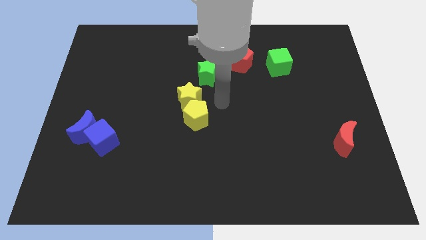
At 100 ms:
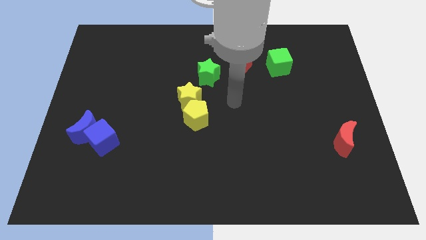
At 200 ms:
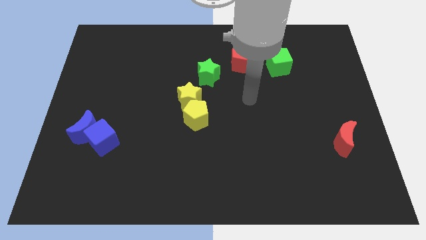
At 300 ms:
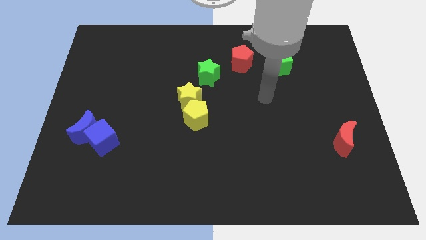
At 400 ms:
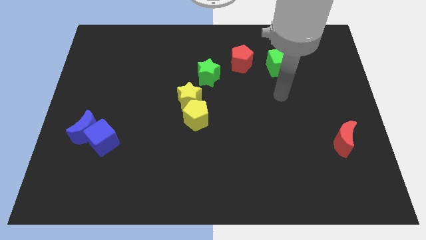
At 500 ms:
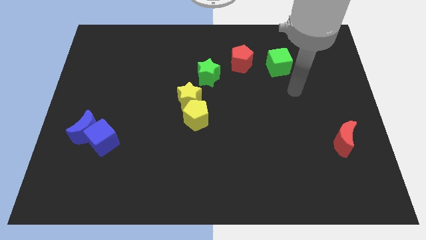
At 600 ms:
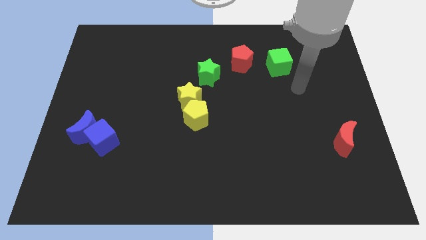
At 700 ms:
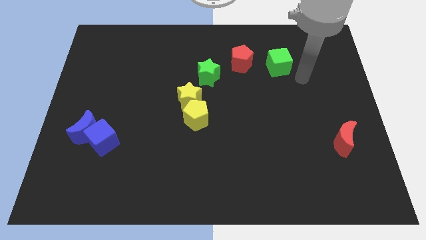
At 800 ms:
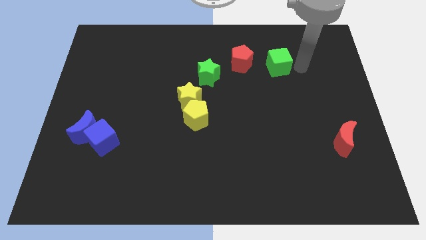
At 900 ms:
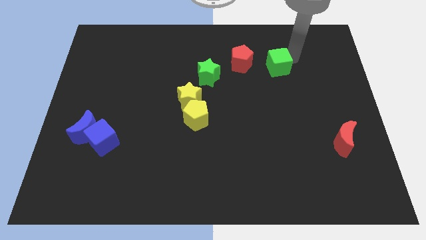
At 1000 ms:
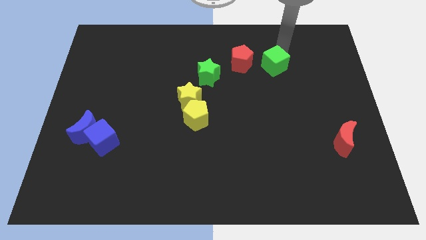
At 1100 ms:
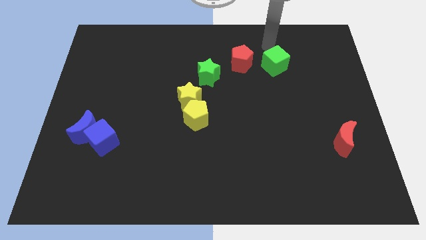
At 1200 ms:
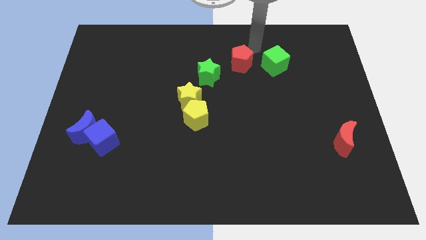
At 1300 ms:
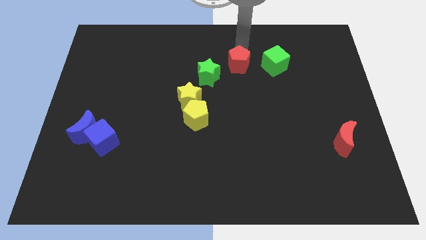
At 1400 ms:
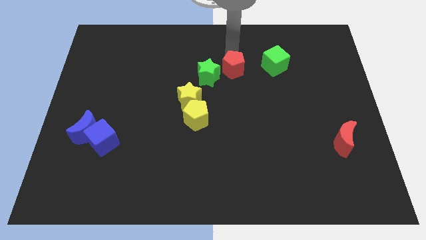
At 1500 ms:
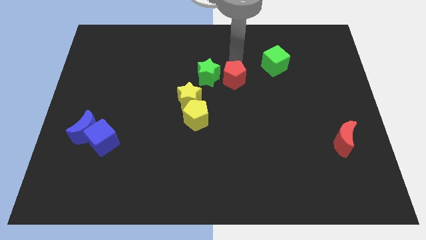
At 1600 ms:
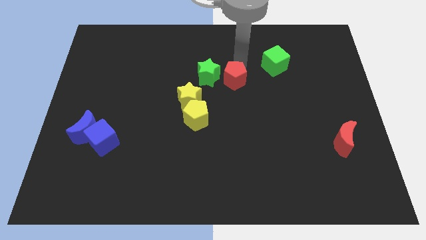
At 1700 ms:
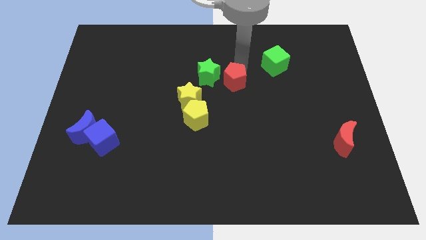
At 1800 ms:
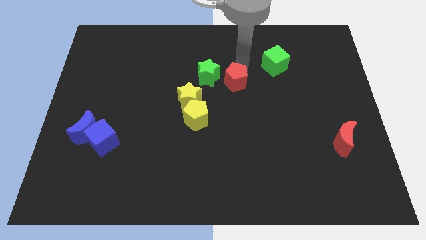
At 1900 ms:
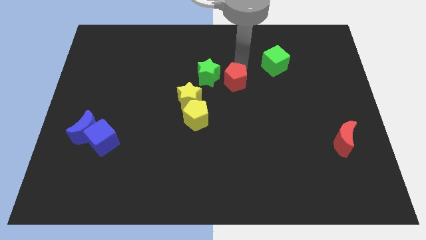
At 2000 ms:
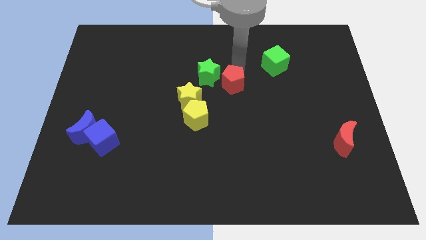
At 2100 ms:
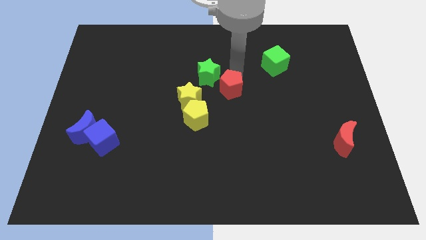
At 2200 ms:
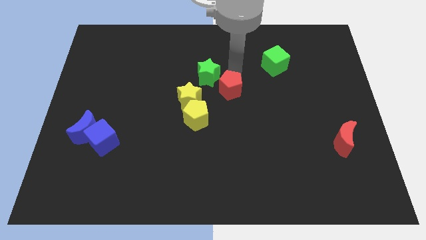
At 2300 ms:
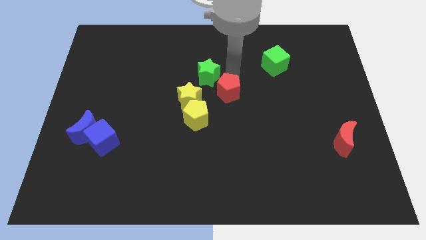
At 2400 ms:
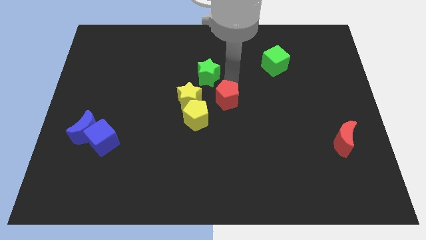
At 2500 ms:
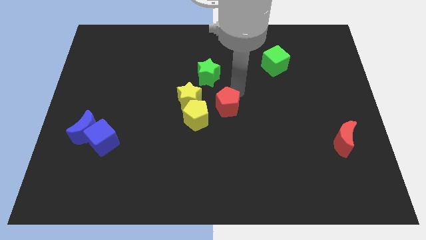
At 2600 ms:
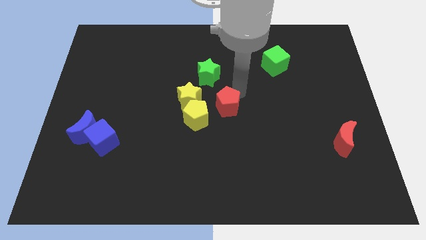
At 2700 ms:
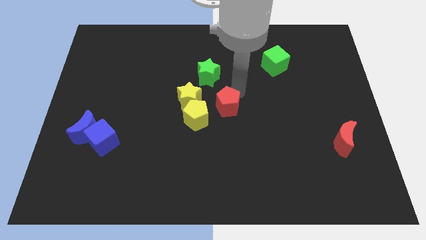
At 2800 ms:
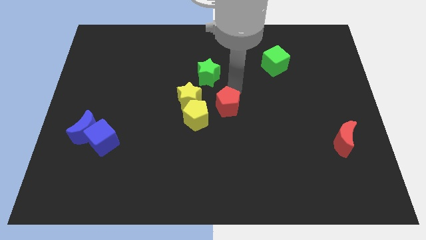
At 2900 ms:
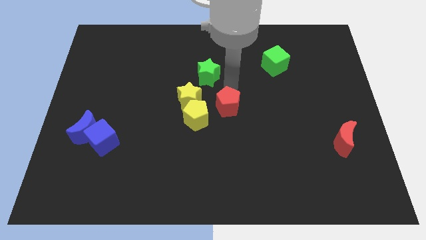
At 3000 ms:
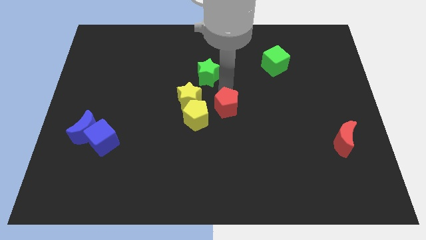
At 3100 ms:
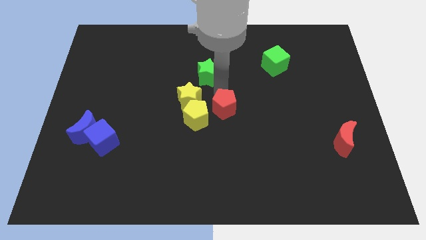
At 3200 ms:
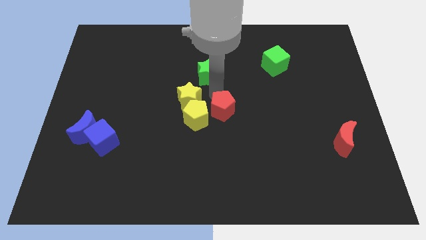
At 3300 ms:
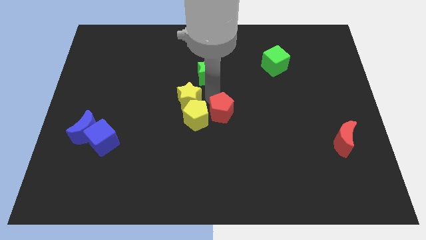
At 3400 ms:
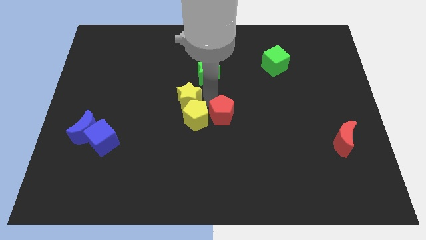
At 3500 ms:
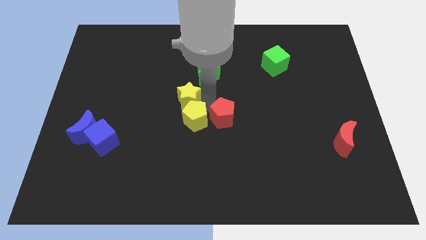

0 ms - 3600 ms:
place red pentagon right to yellow pentagon

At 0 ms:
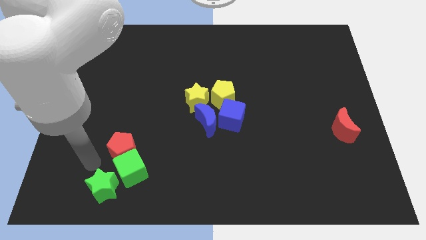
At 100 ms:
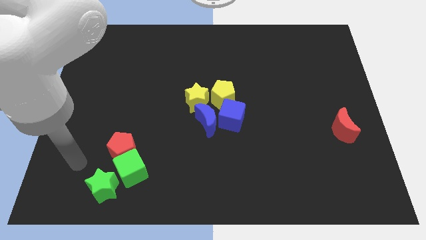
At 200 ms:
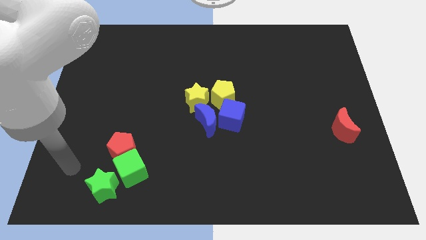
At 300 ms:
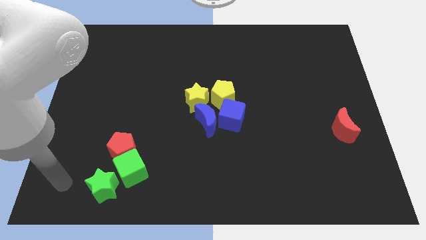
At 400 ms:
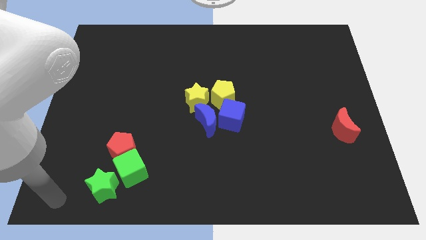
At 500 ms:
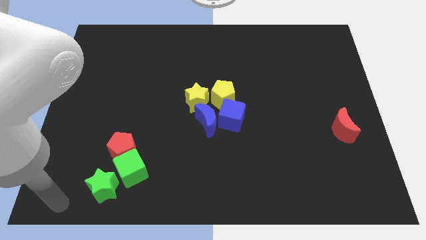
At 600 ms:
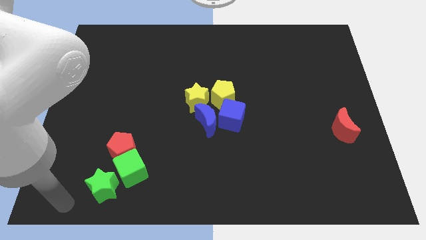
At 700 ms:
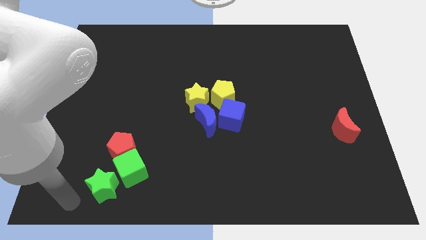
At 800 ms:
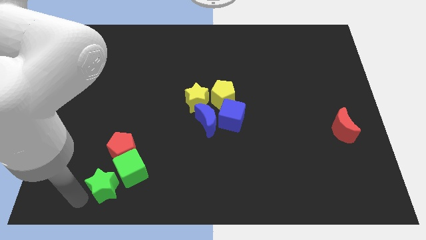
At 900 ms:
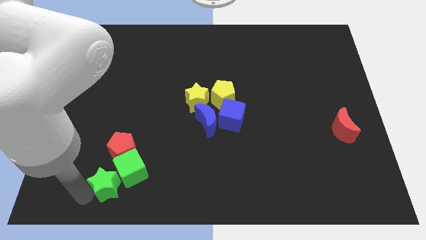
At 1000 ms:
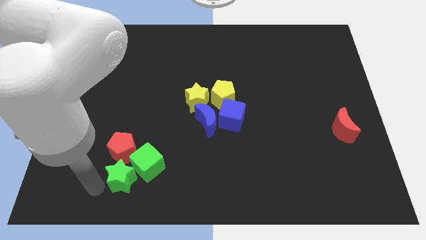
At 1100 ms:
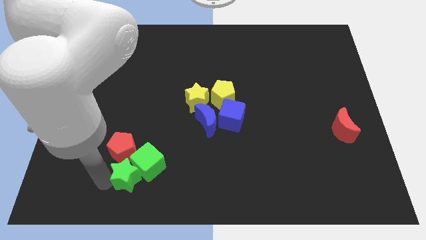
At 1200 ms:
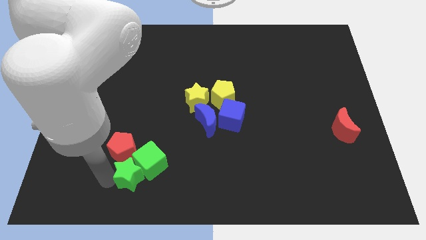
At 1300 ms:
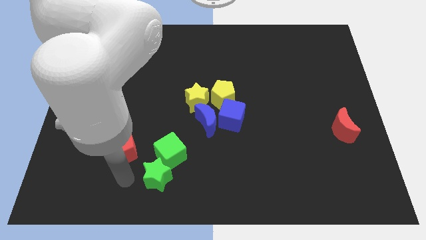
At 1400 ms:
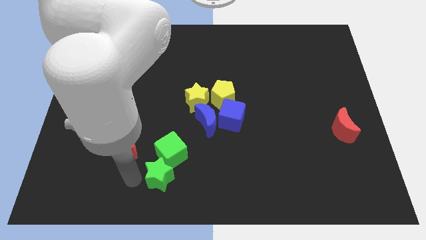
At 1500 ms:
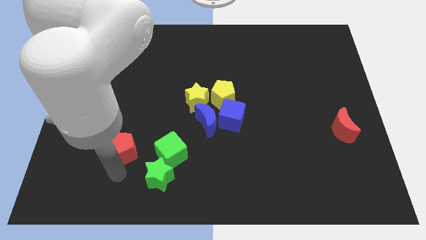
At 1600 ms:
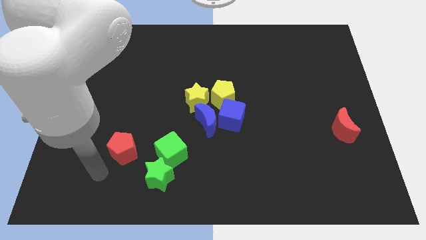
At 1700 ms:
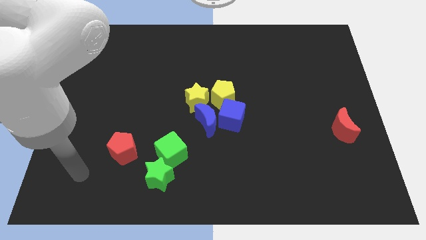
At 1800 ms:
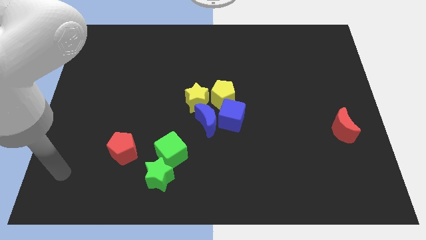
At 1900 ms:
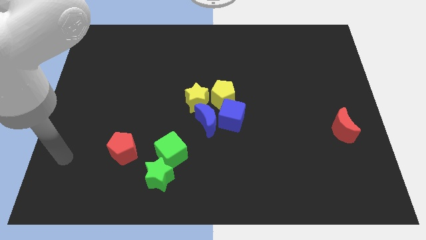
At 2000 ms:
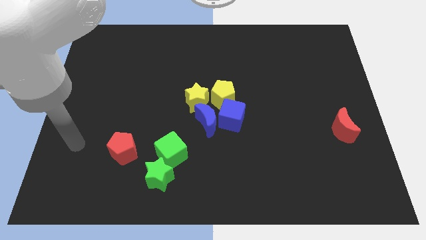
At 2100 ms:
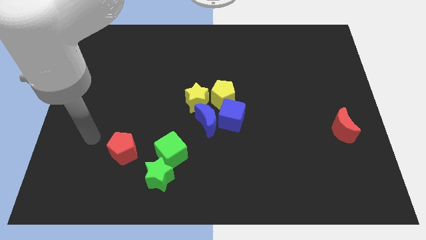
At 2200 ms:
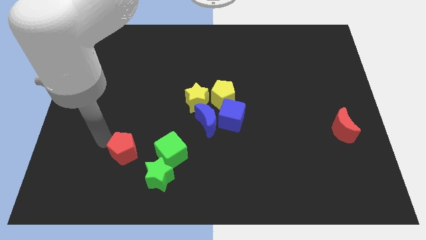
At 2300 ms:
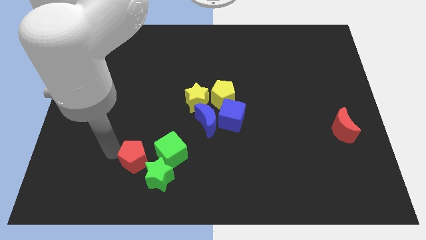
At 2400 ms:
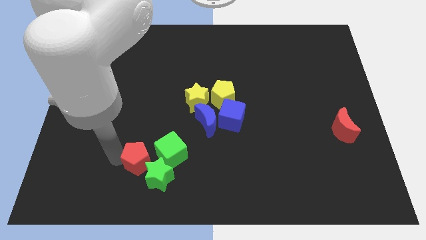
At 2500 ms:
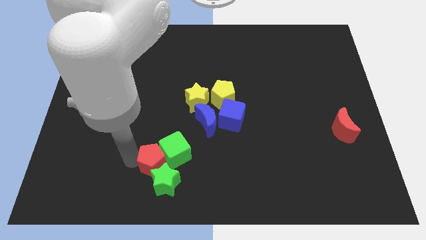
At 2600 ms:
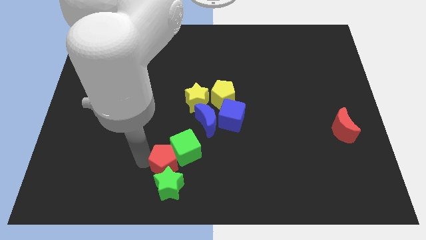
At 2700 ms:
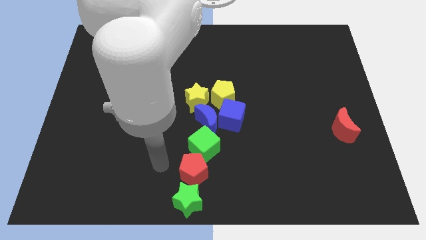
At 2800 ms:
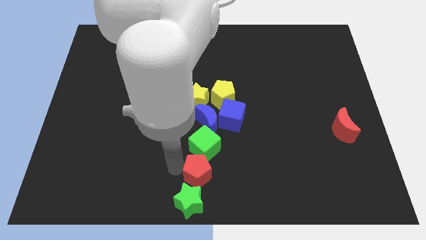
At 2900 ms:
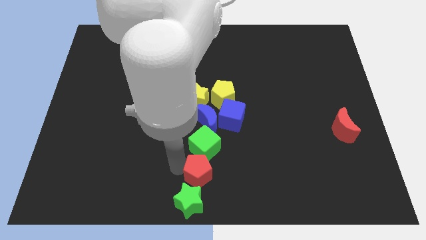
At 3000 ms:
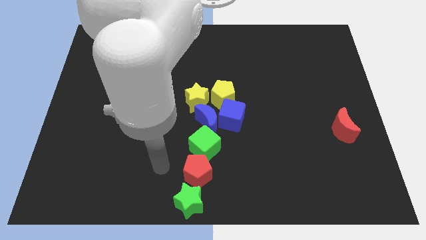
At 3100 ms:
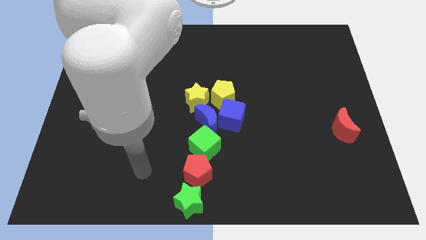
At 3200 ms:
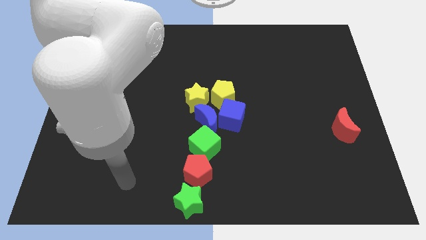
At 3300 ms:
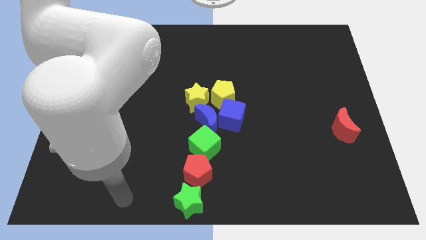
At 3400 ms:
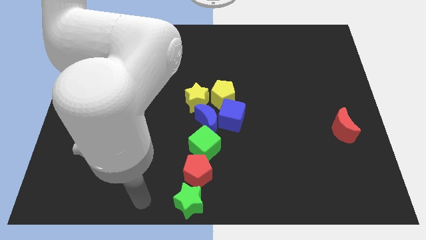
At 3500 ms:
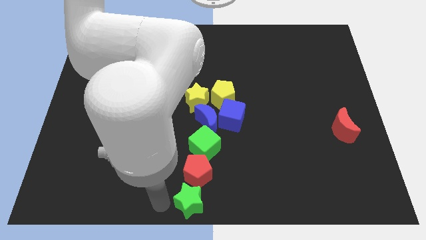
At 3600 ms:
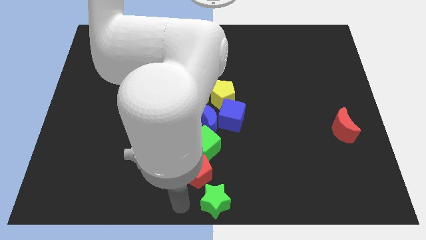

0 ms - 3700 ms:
separate the green star and the green cube

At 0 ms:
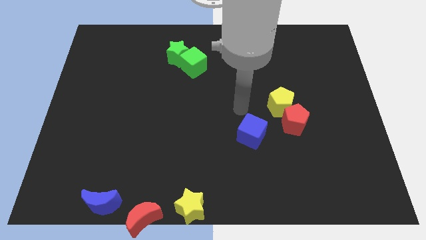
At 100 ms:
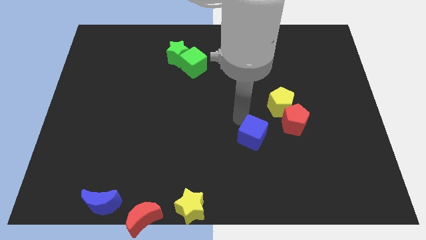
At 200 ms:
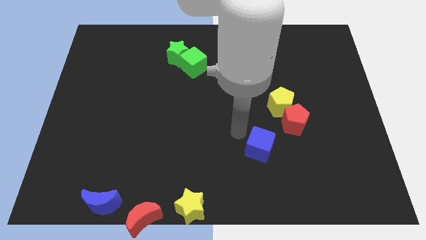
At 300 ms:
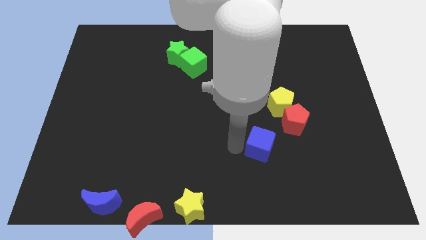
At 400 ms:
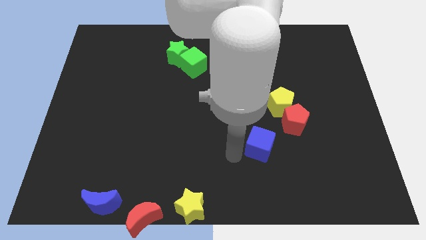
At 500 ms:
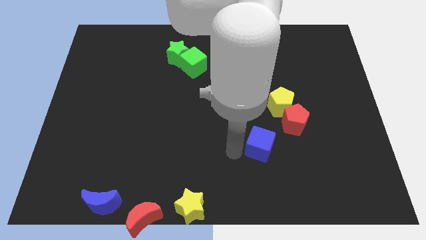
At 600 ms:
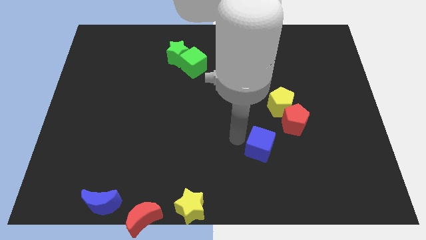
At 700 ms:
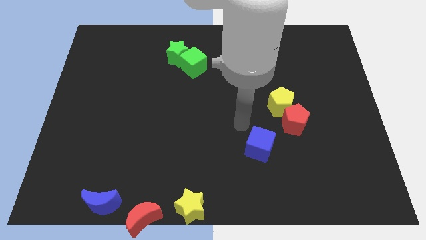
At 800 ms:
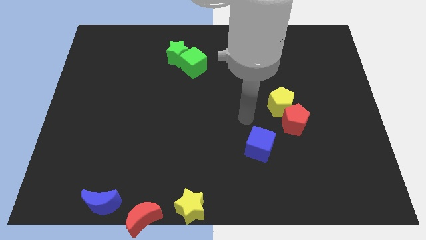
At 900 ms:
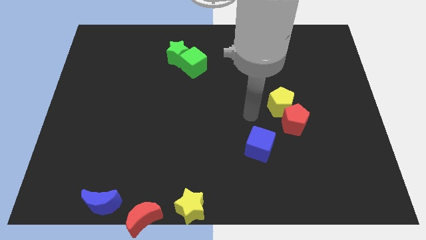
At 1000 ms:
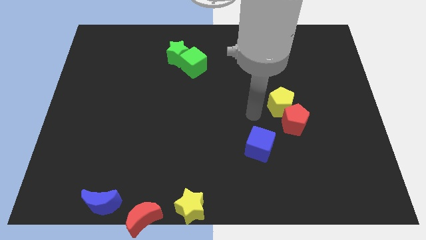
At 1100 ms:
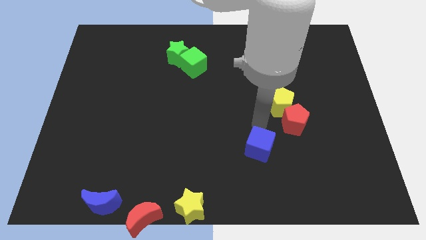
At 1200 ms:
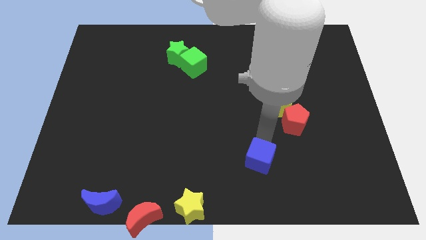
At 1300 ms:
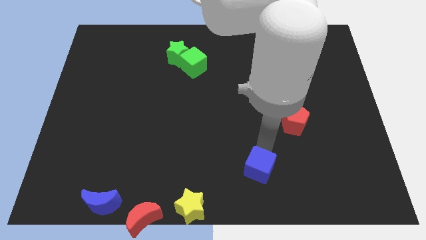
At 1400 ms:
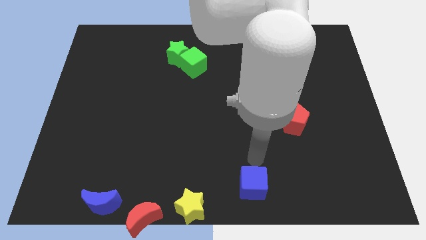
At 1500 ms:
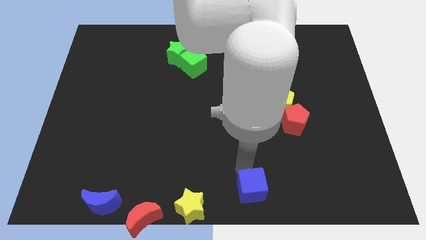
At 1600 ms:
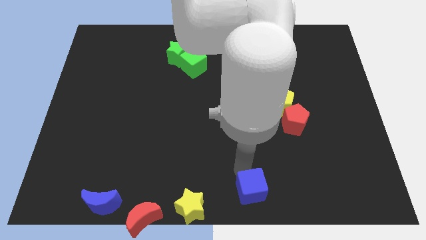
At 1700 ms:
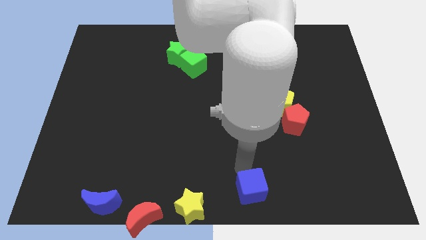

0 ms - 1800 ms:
push the blue cube to the bottom end of the board
